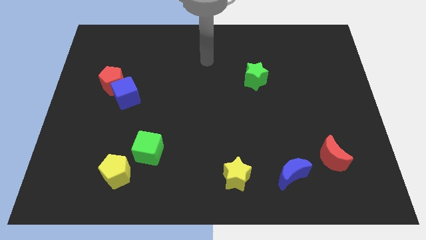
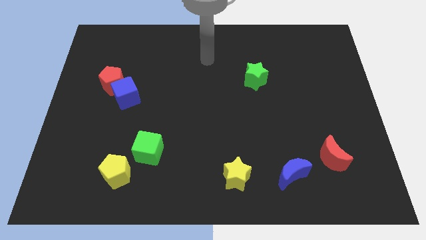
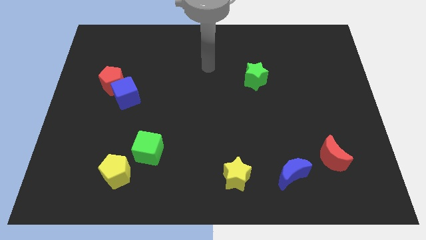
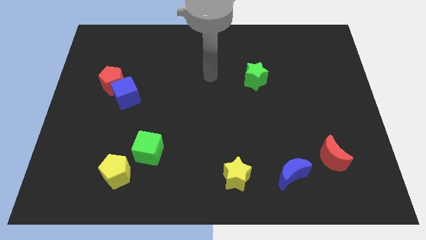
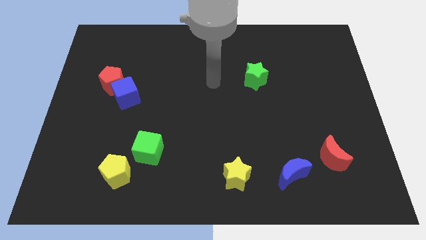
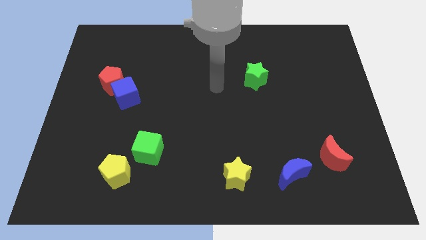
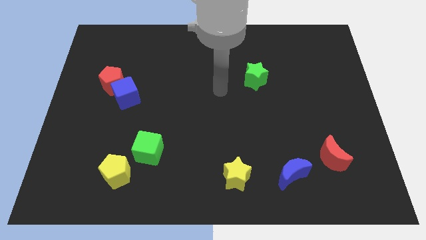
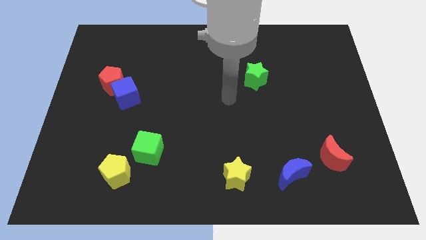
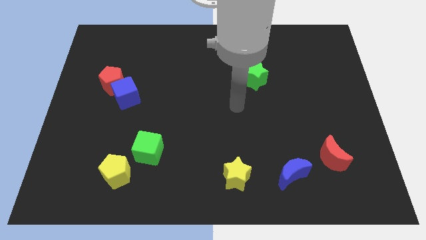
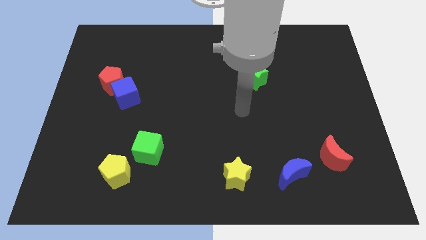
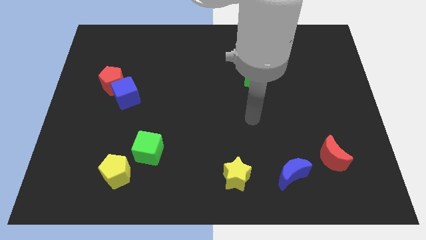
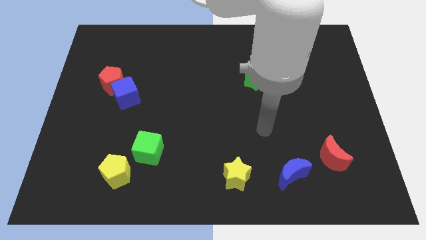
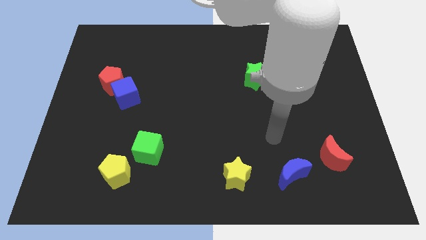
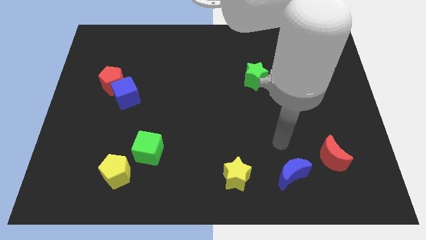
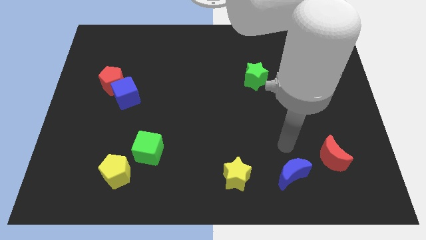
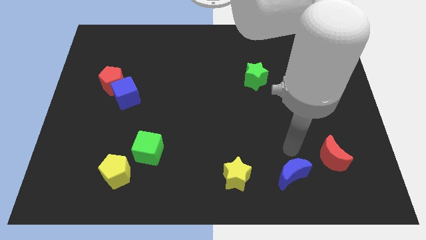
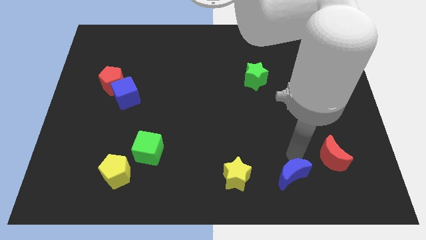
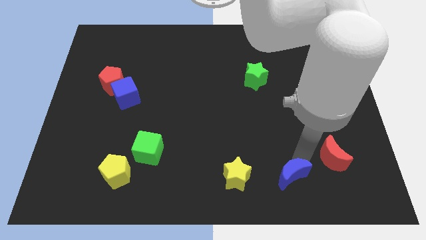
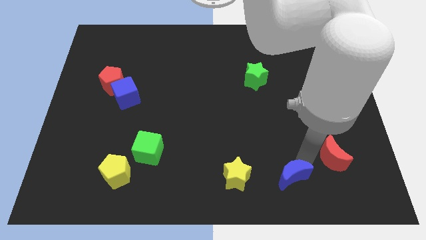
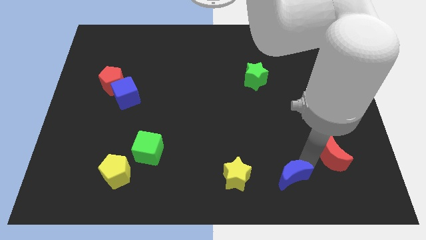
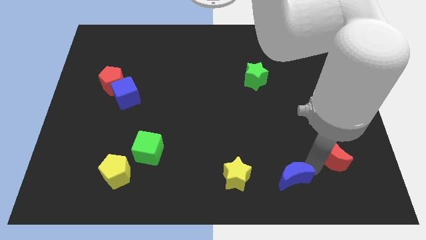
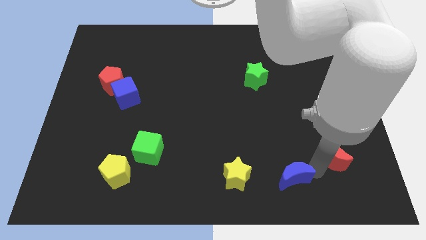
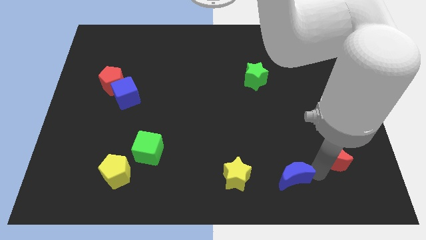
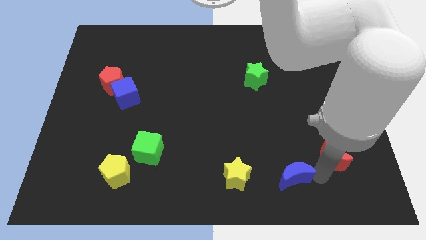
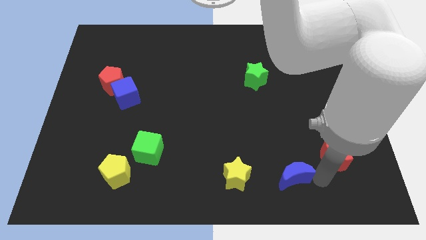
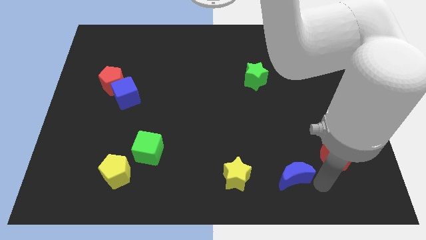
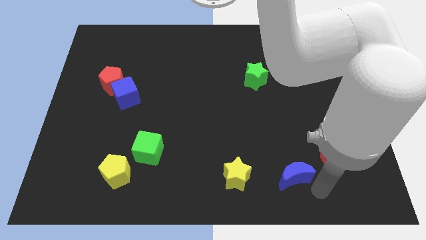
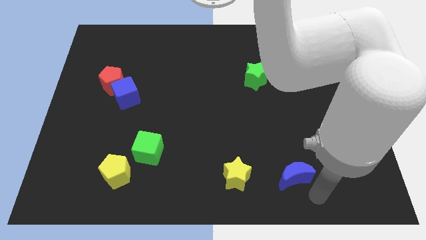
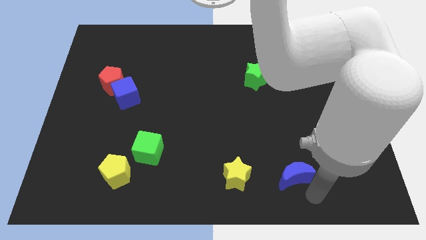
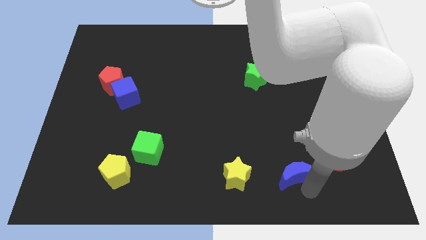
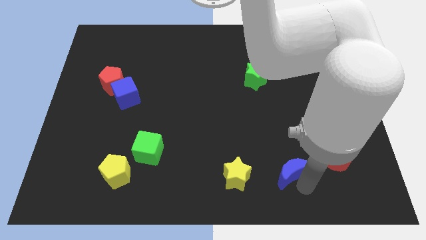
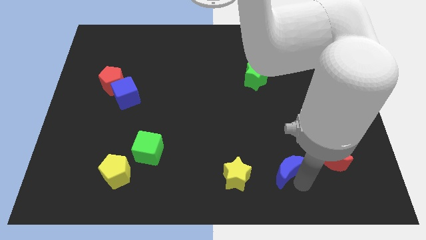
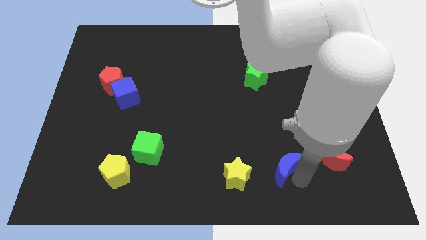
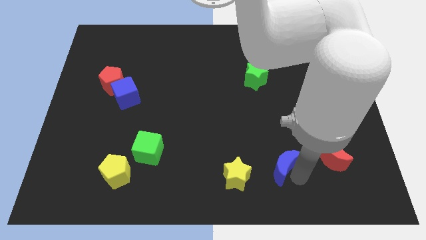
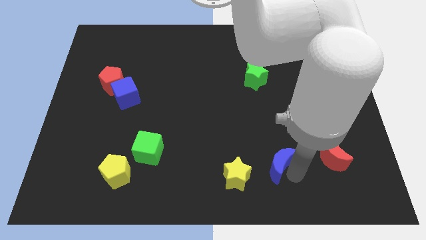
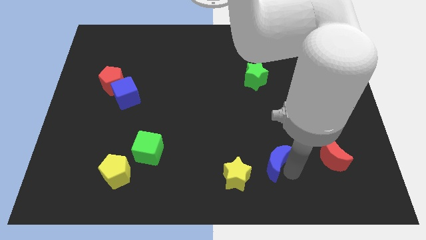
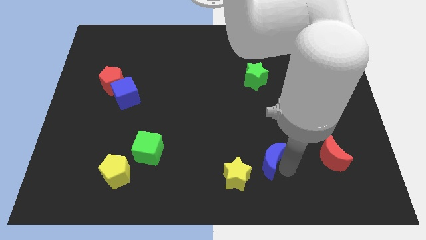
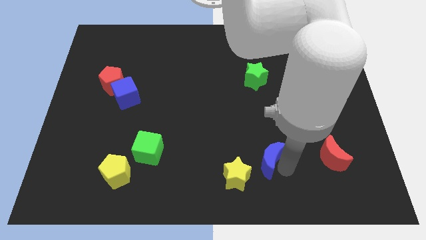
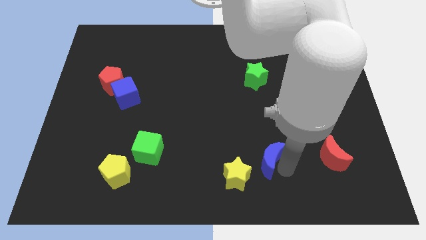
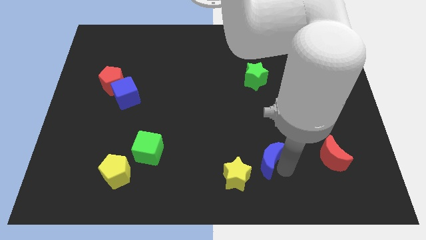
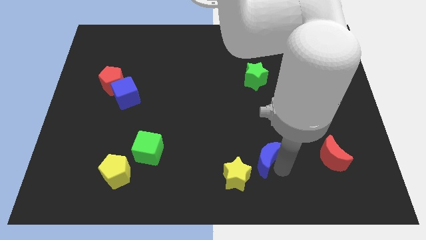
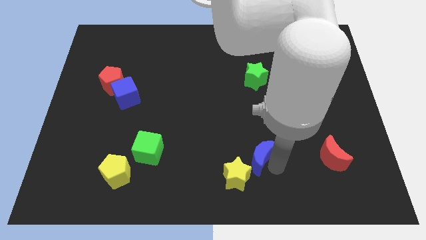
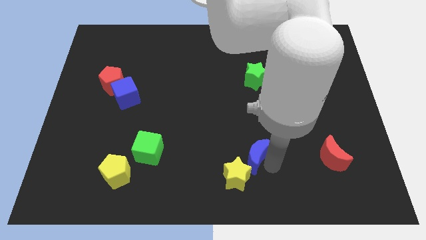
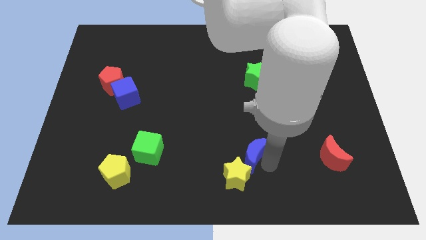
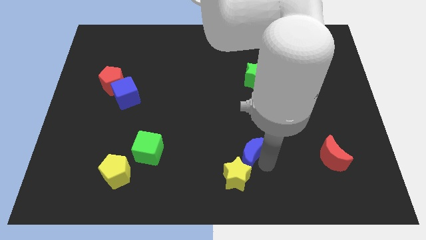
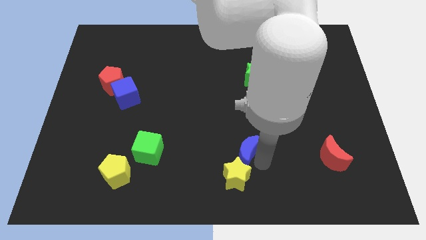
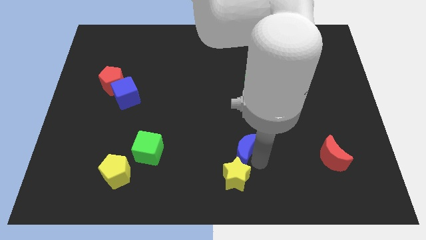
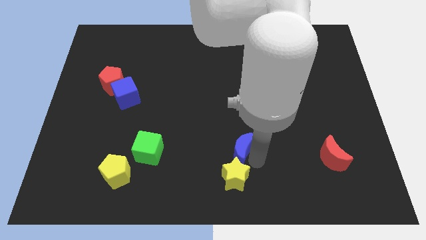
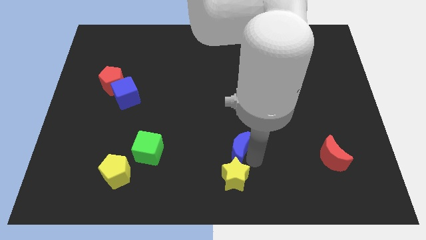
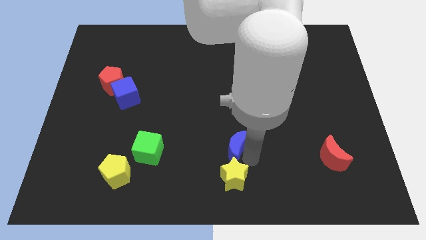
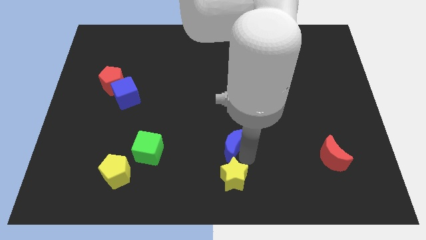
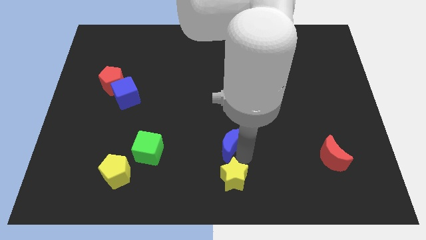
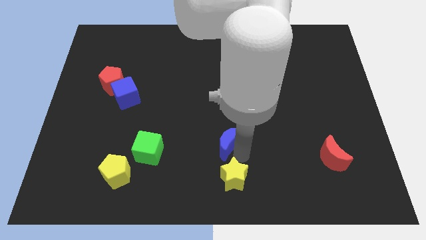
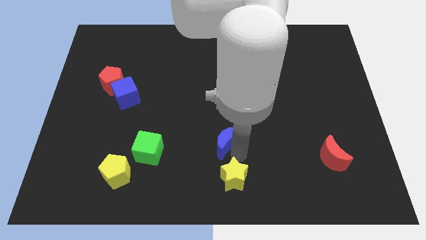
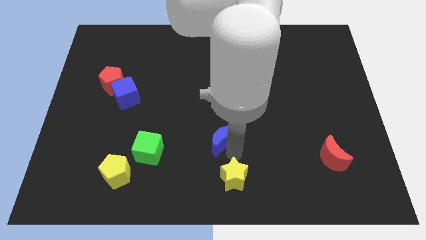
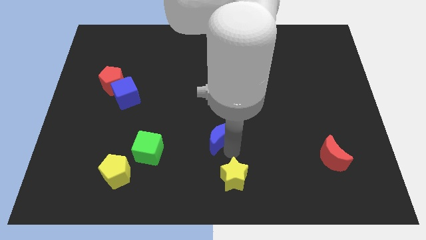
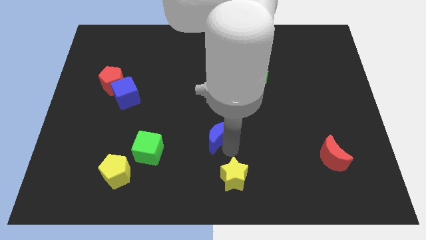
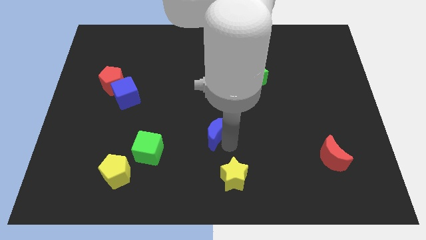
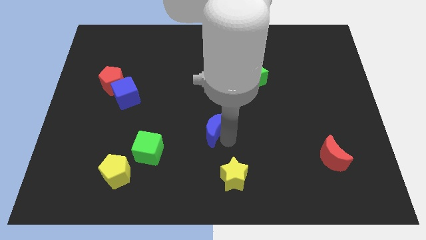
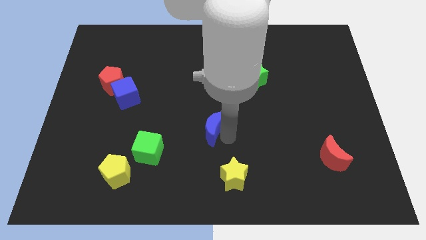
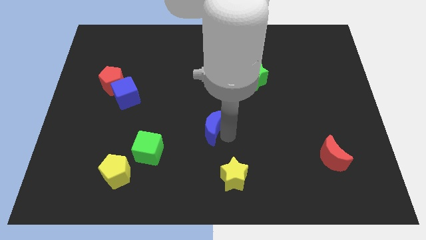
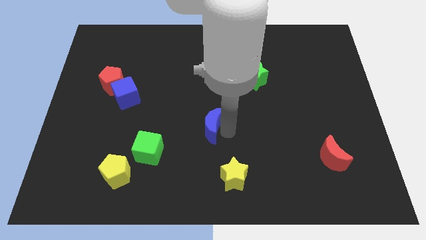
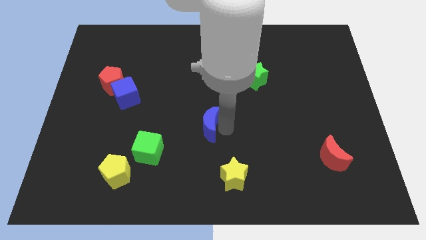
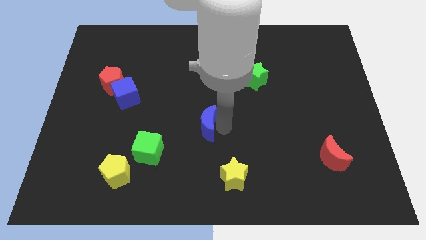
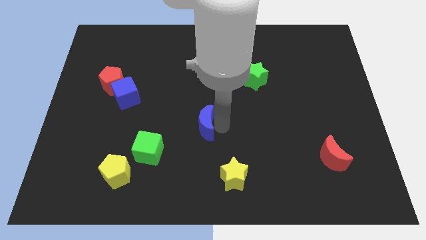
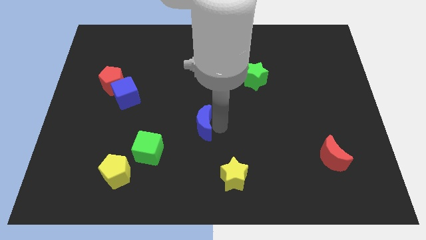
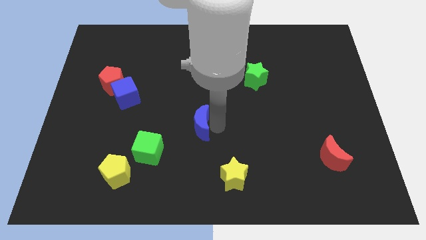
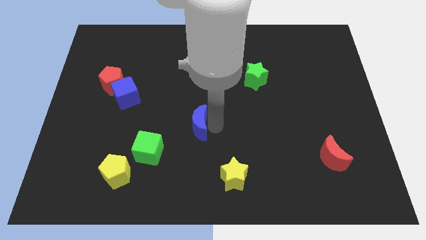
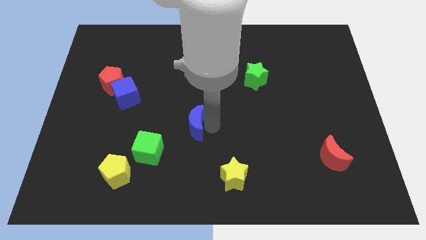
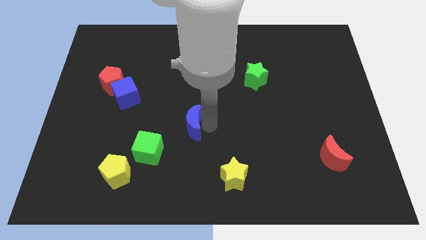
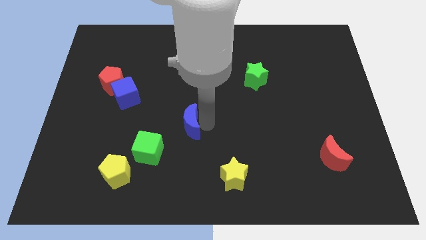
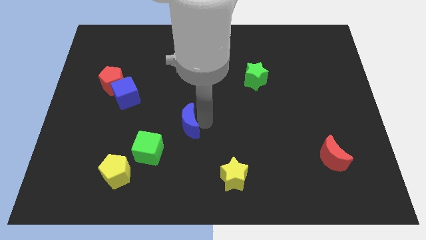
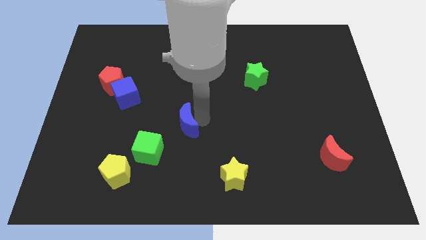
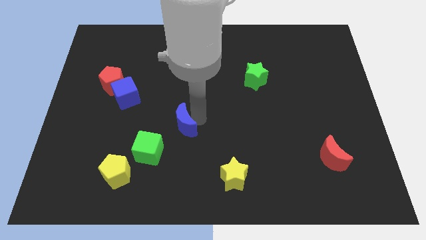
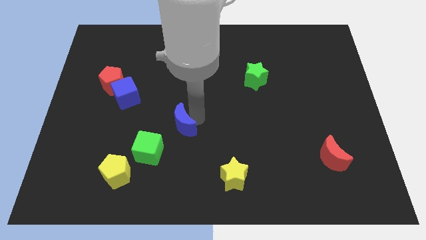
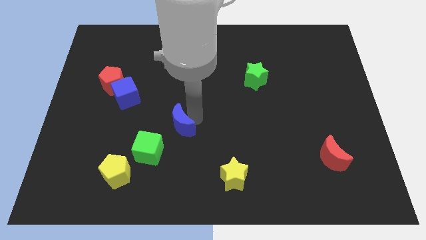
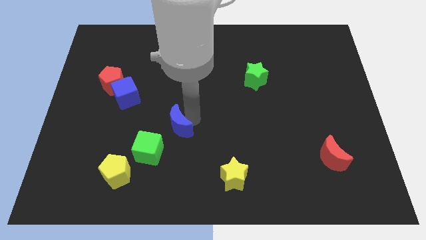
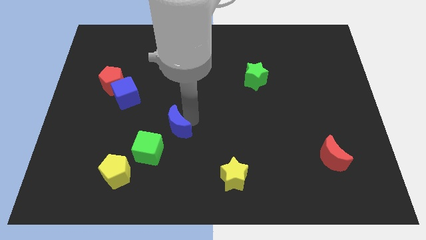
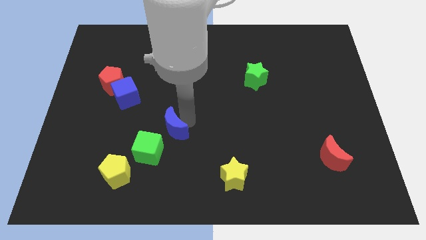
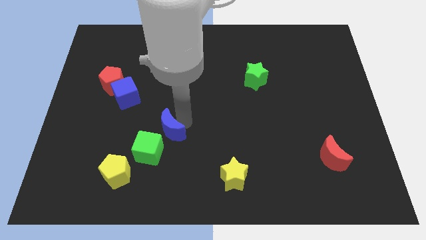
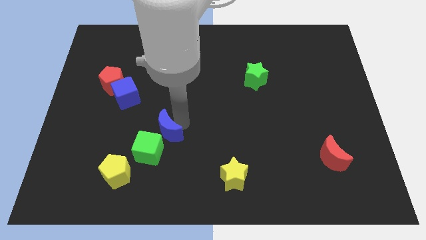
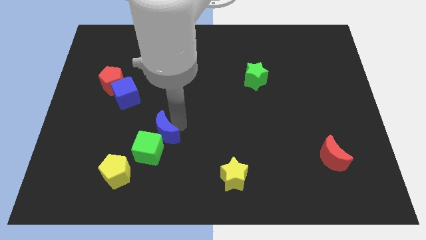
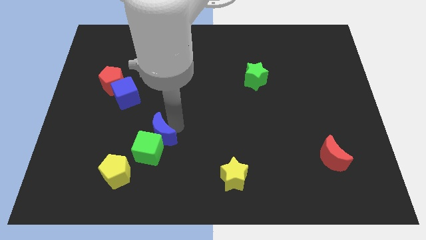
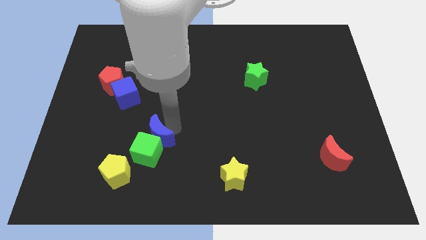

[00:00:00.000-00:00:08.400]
put the blue moon towards the green cube
